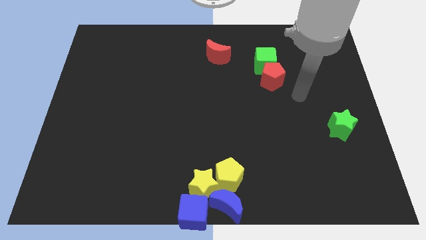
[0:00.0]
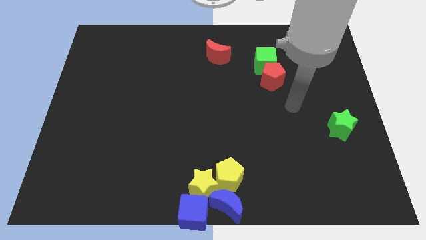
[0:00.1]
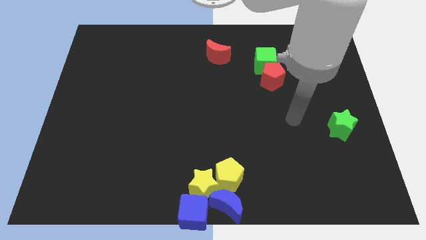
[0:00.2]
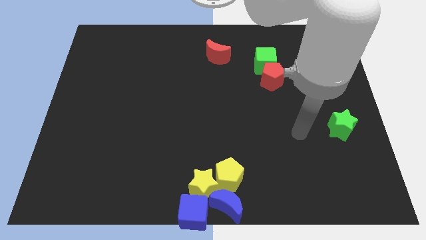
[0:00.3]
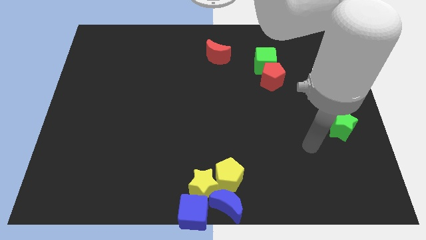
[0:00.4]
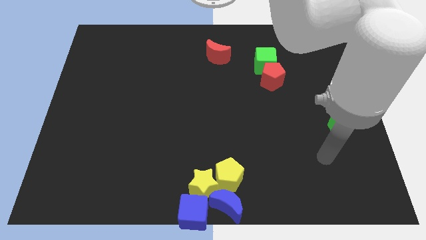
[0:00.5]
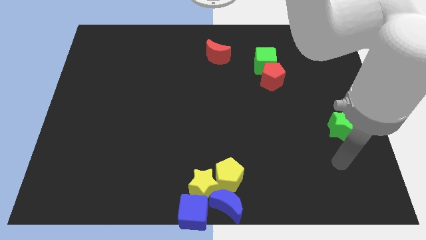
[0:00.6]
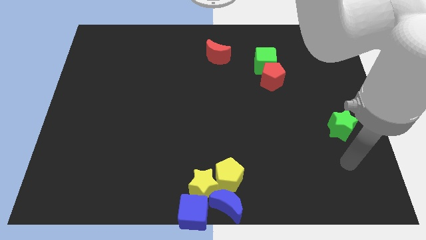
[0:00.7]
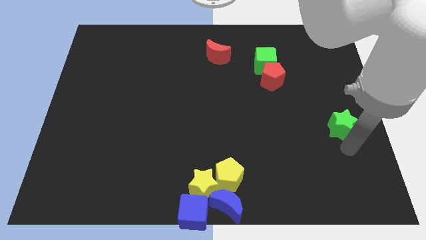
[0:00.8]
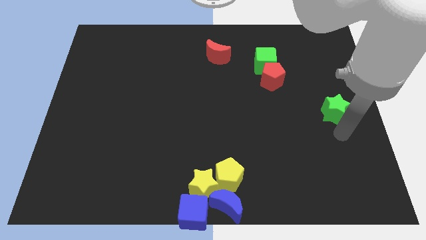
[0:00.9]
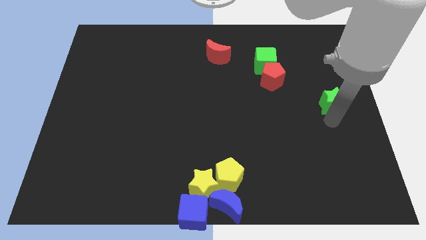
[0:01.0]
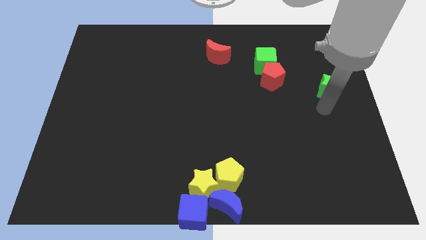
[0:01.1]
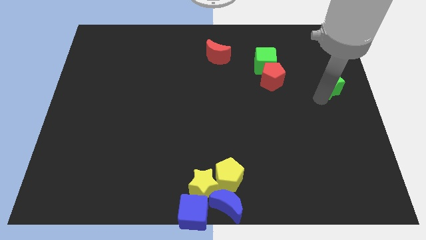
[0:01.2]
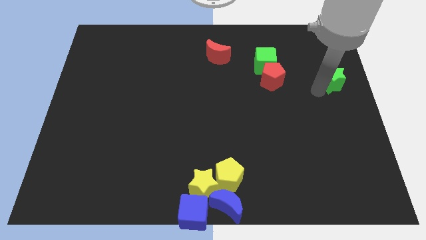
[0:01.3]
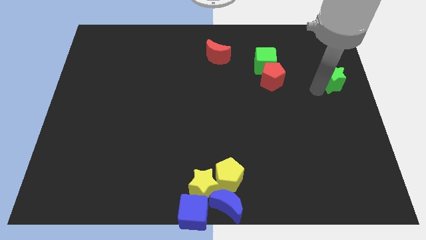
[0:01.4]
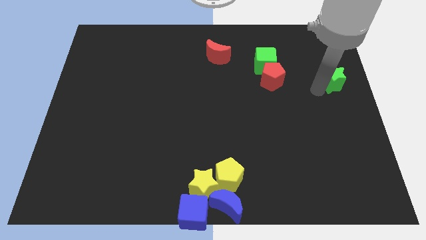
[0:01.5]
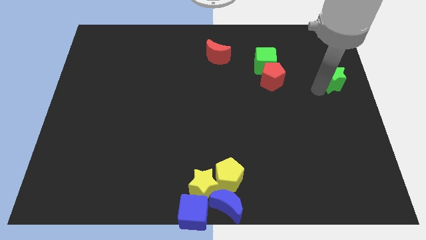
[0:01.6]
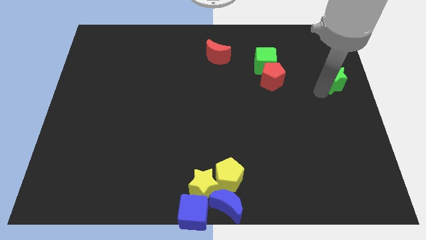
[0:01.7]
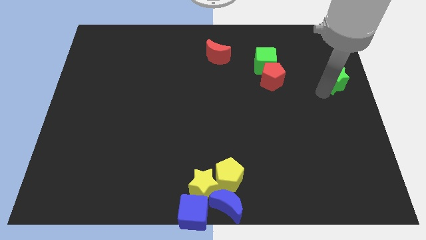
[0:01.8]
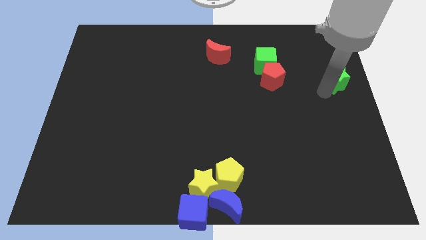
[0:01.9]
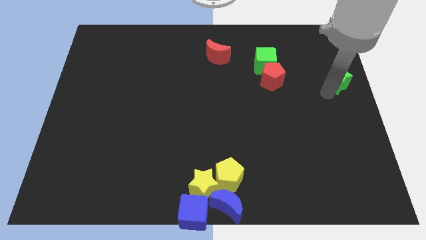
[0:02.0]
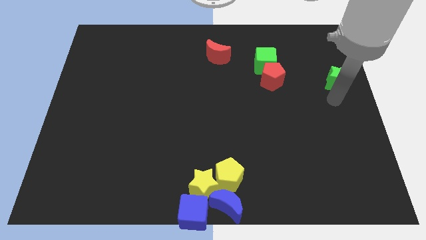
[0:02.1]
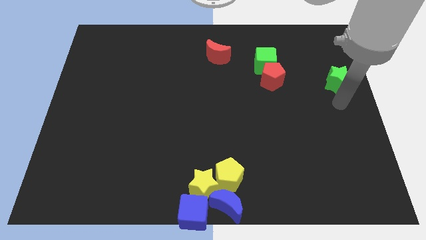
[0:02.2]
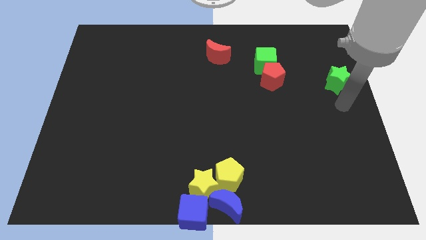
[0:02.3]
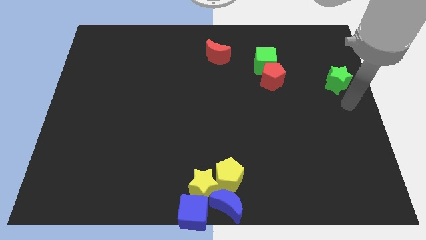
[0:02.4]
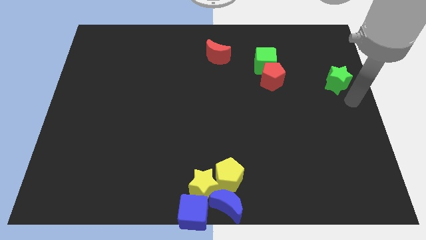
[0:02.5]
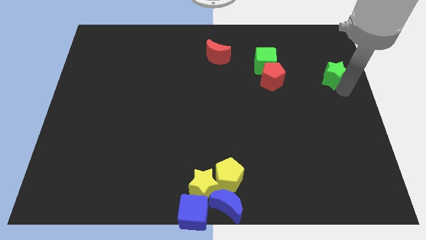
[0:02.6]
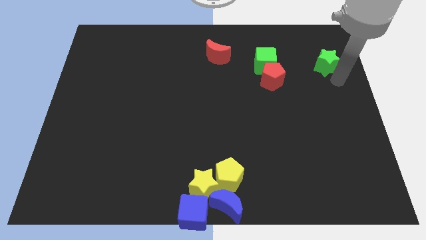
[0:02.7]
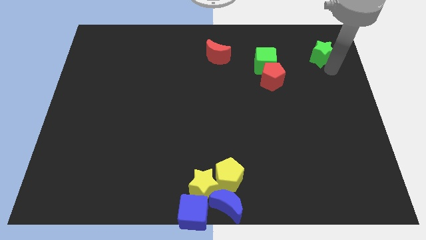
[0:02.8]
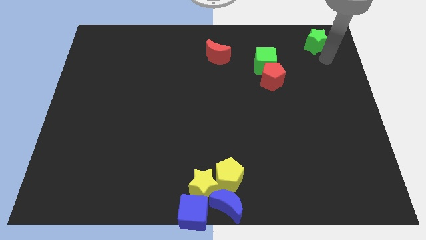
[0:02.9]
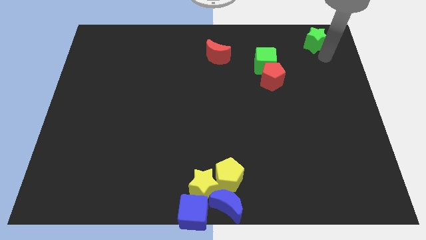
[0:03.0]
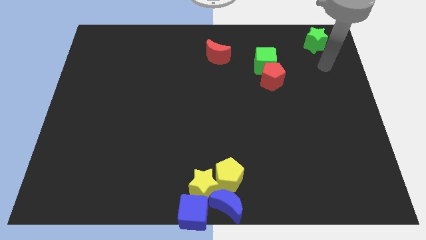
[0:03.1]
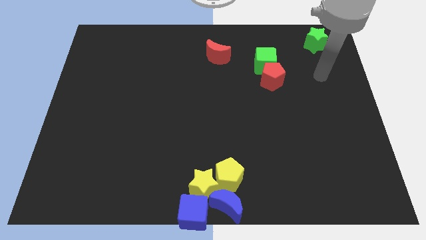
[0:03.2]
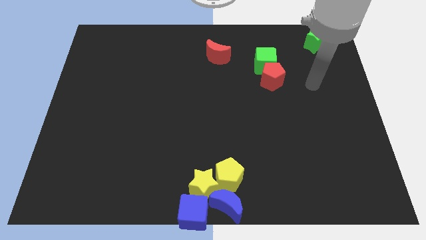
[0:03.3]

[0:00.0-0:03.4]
place the green star towards the top right corner side of the board

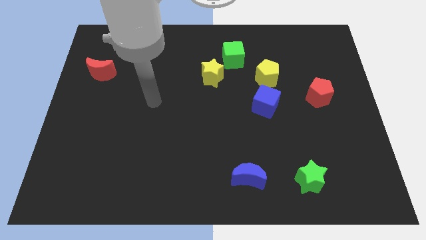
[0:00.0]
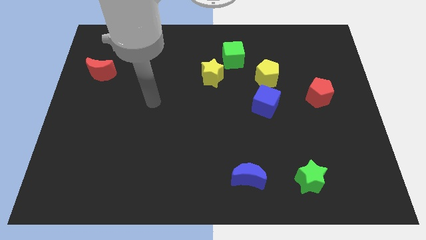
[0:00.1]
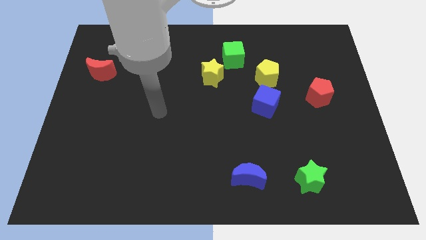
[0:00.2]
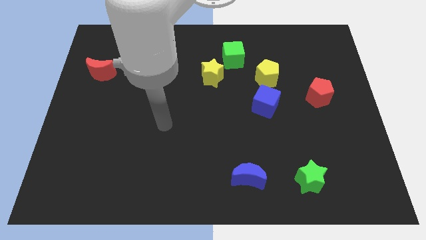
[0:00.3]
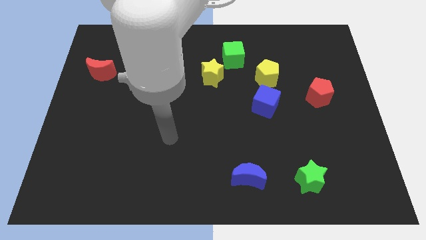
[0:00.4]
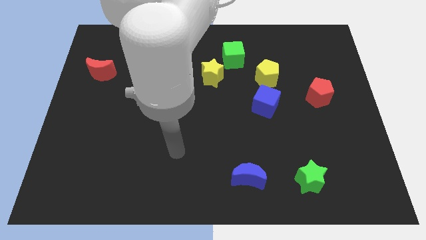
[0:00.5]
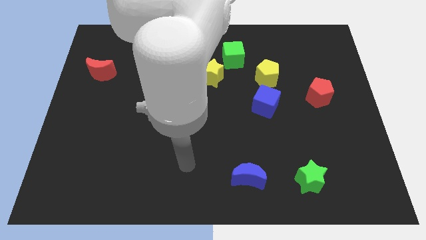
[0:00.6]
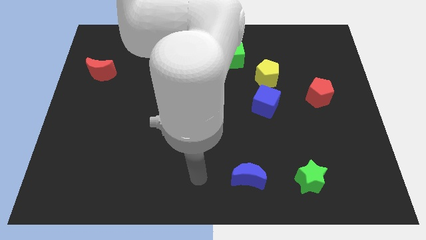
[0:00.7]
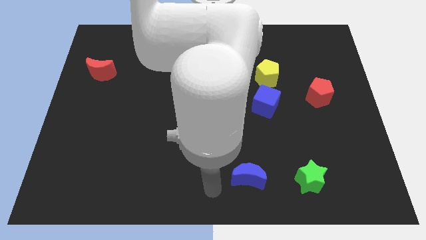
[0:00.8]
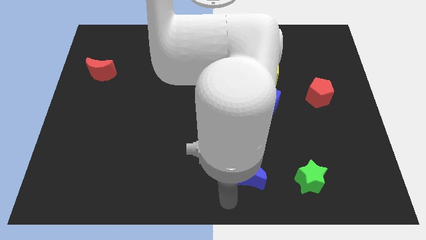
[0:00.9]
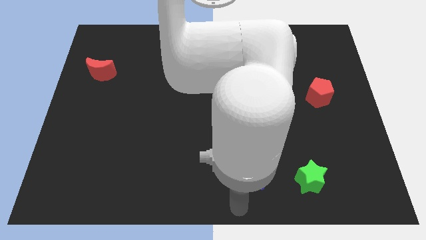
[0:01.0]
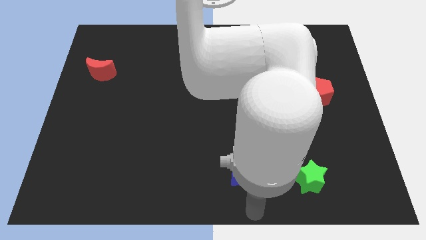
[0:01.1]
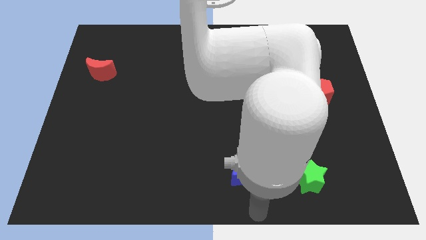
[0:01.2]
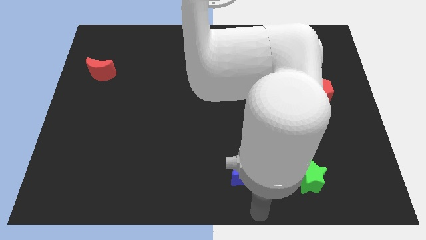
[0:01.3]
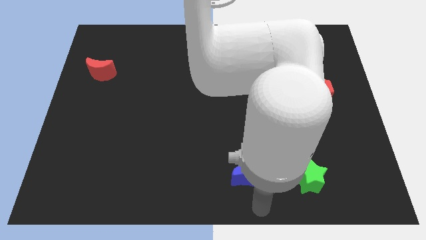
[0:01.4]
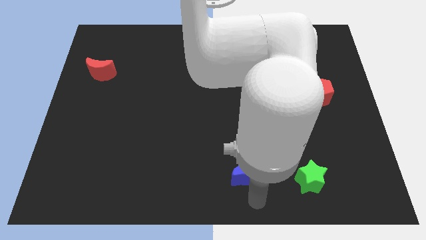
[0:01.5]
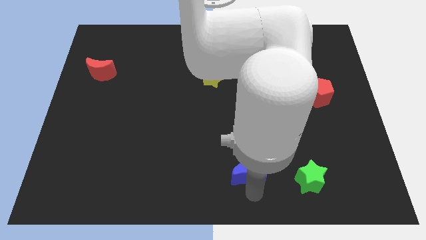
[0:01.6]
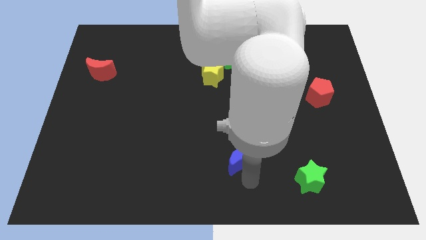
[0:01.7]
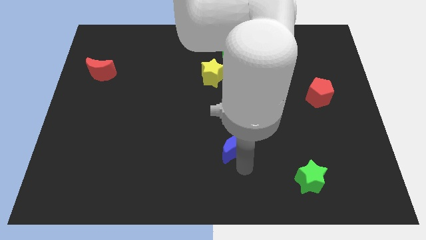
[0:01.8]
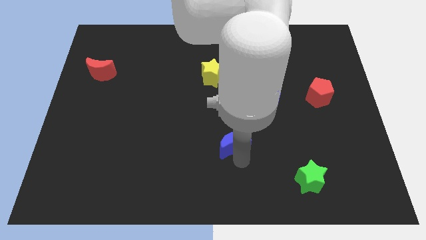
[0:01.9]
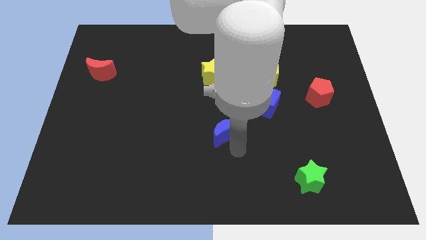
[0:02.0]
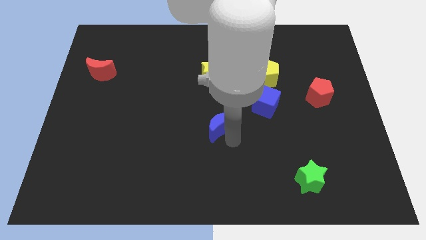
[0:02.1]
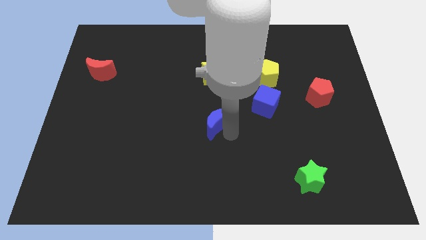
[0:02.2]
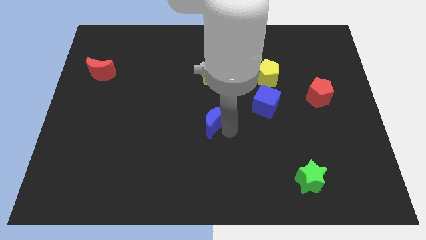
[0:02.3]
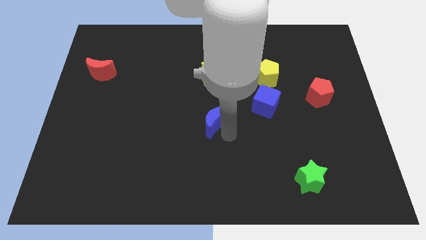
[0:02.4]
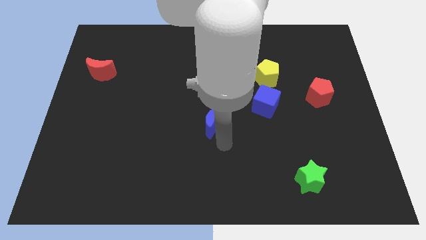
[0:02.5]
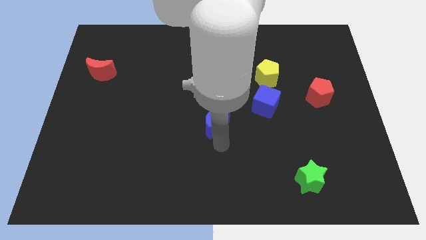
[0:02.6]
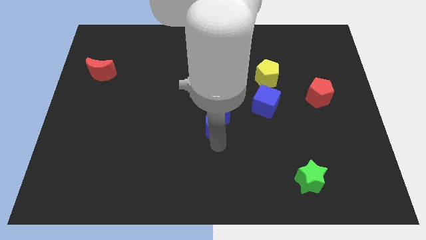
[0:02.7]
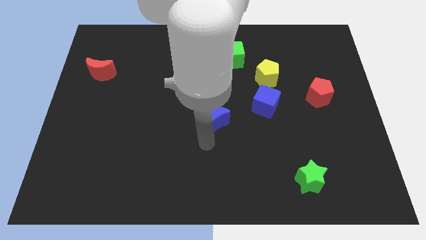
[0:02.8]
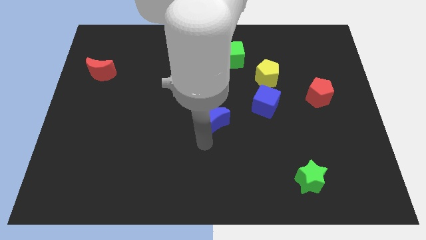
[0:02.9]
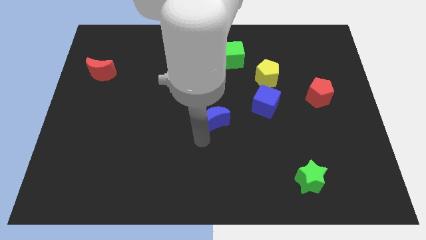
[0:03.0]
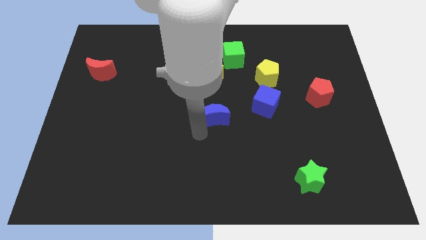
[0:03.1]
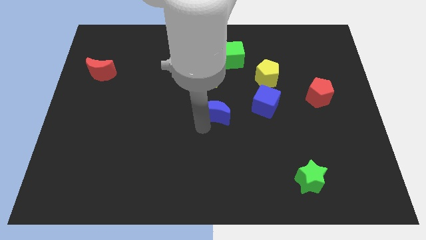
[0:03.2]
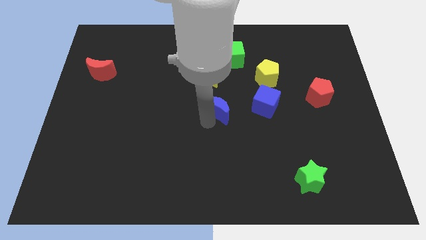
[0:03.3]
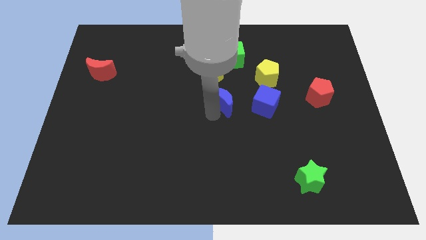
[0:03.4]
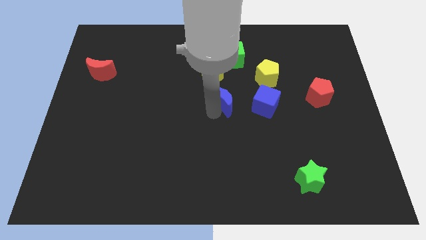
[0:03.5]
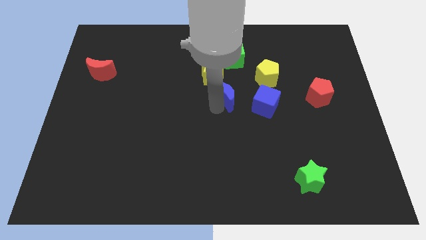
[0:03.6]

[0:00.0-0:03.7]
place the blue crescent to the left of the blue cube

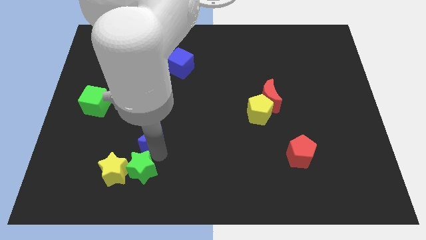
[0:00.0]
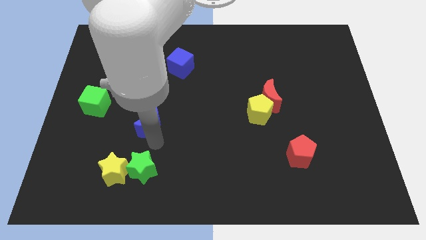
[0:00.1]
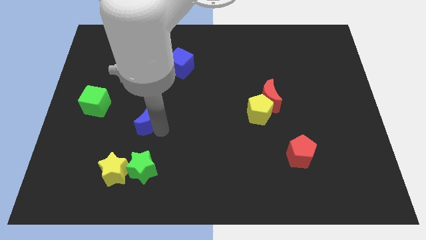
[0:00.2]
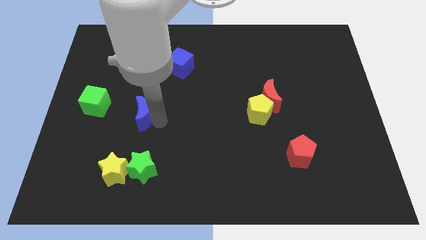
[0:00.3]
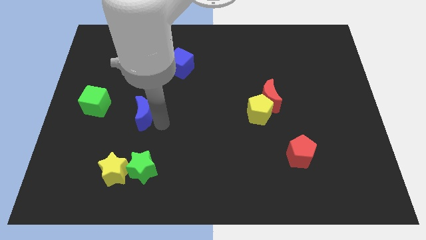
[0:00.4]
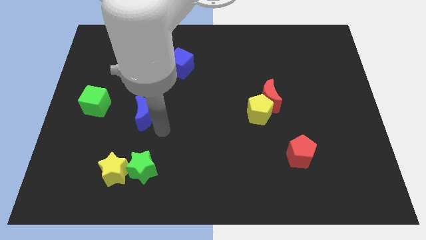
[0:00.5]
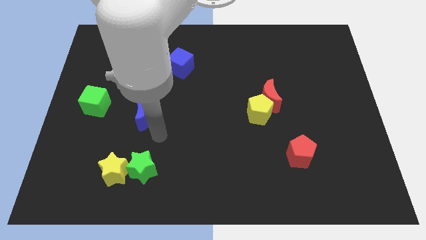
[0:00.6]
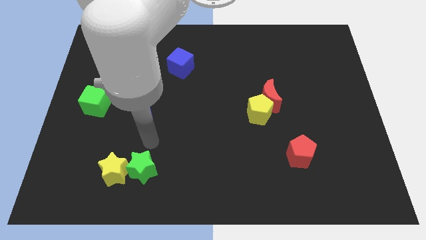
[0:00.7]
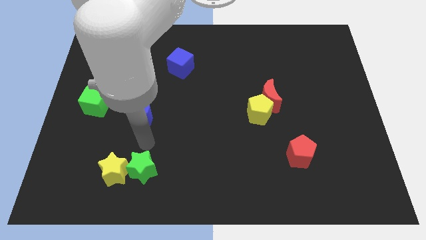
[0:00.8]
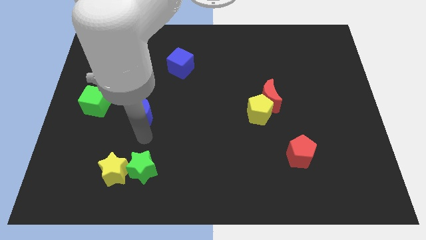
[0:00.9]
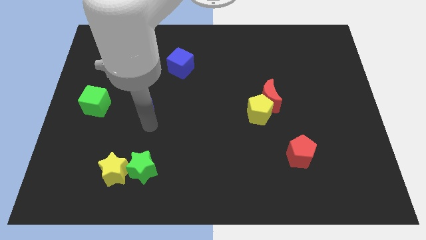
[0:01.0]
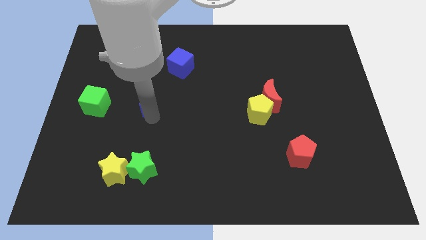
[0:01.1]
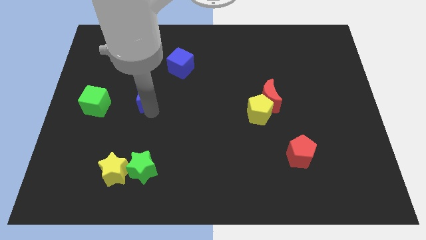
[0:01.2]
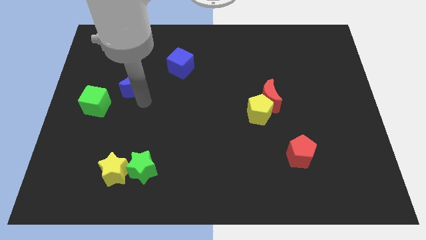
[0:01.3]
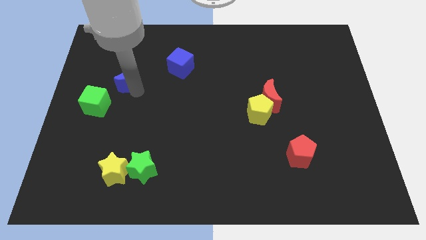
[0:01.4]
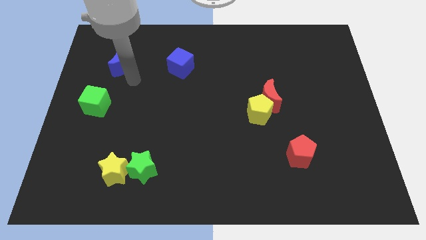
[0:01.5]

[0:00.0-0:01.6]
place the blue moon in between the blue cube and green cube

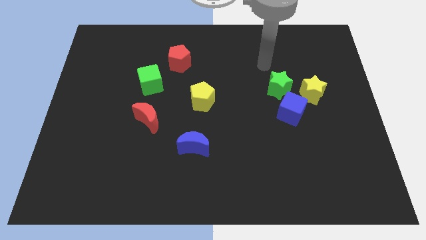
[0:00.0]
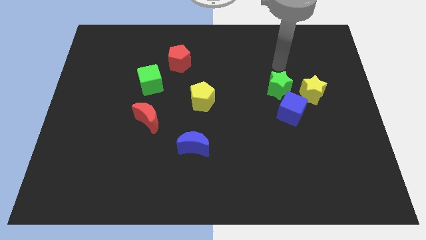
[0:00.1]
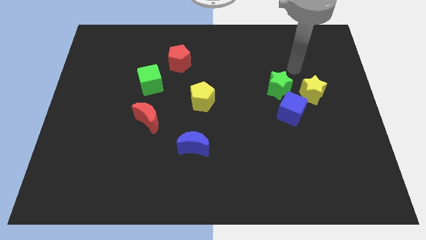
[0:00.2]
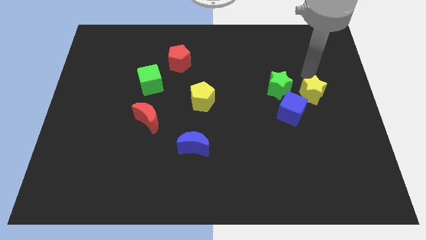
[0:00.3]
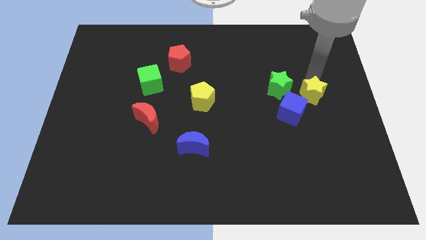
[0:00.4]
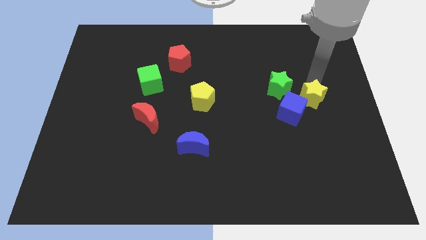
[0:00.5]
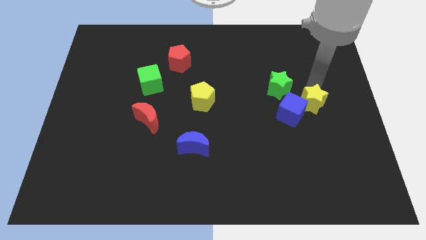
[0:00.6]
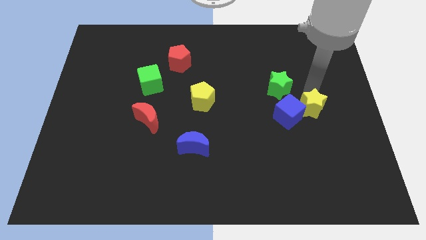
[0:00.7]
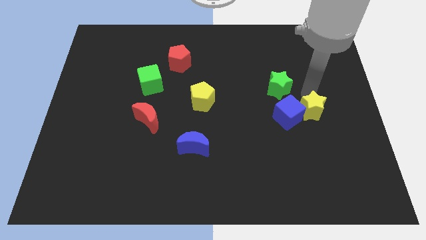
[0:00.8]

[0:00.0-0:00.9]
move yellow star right beside the blue cube
